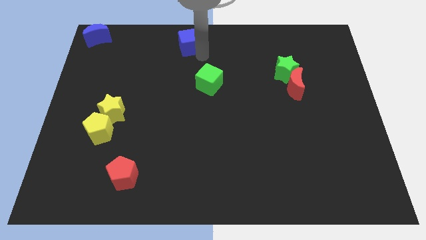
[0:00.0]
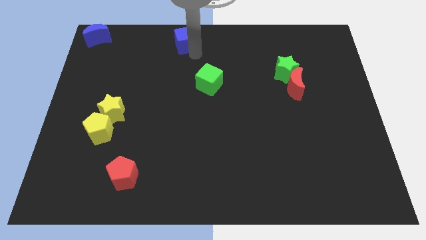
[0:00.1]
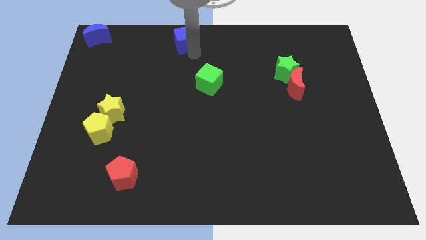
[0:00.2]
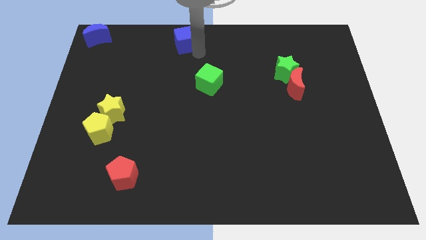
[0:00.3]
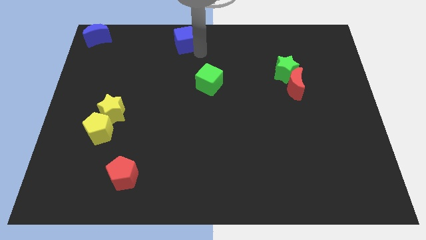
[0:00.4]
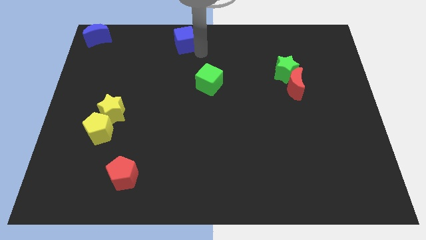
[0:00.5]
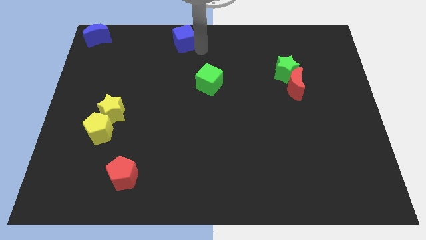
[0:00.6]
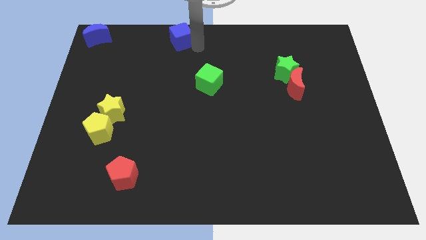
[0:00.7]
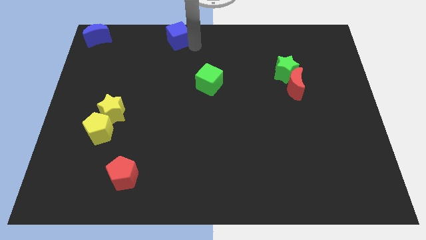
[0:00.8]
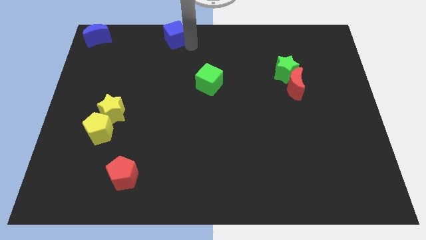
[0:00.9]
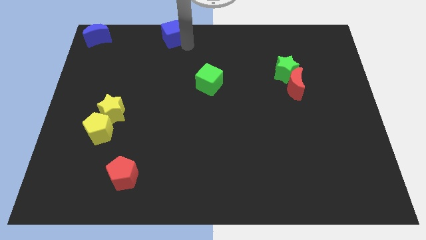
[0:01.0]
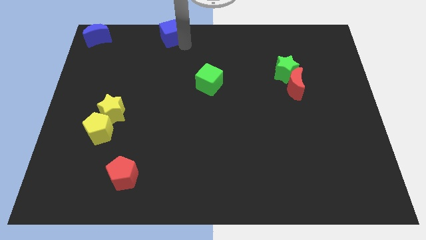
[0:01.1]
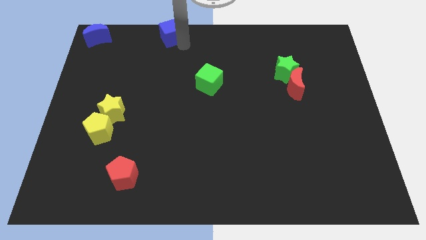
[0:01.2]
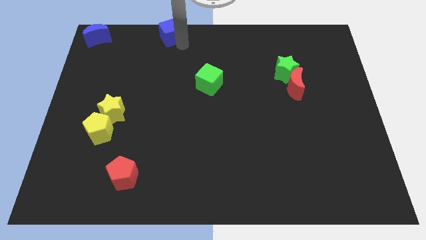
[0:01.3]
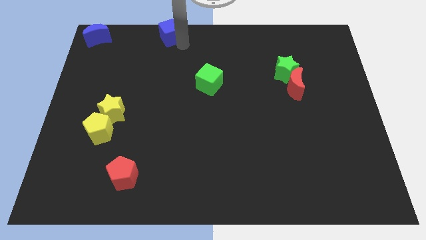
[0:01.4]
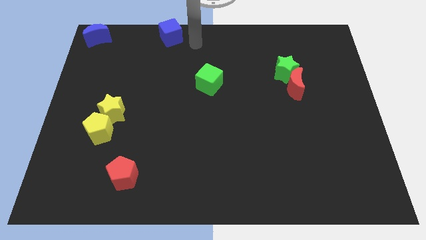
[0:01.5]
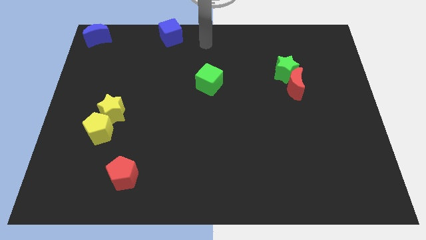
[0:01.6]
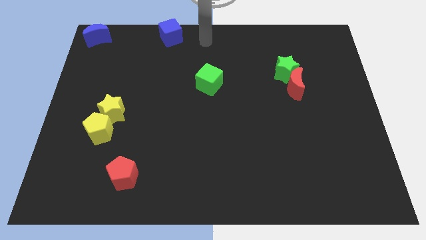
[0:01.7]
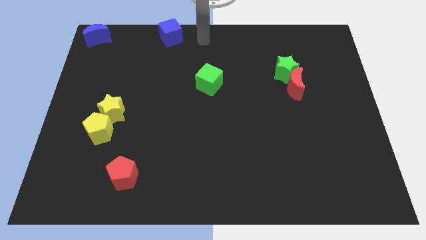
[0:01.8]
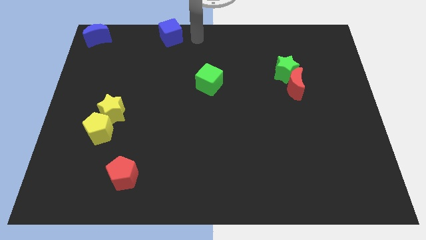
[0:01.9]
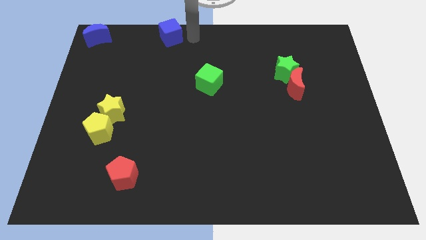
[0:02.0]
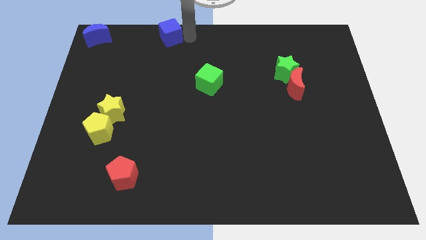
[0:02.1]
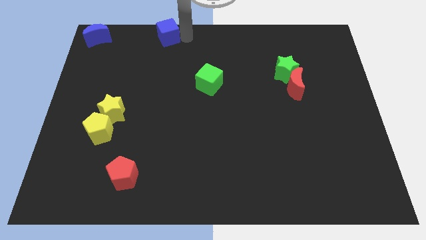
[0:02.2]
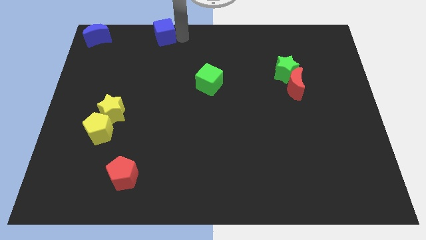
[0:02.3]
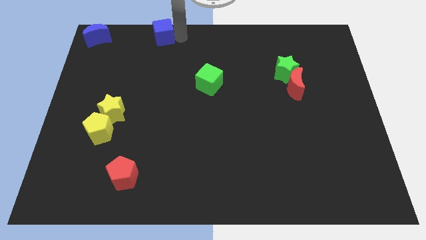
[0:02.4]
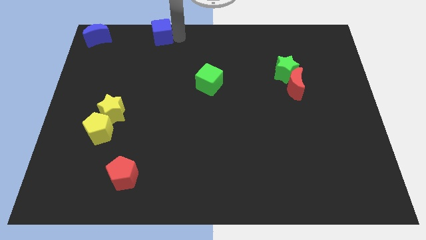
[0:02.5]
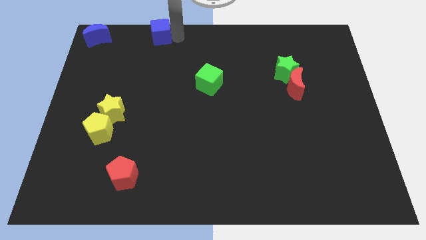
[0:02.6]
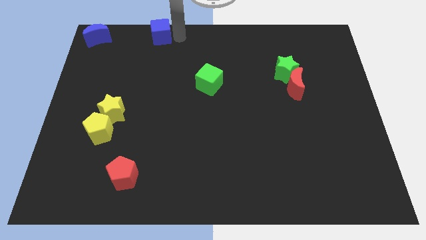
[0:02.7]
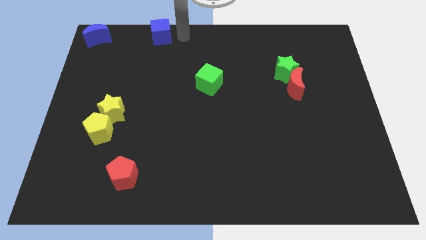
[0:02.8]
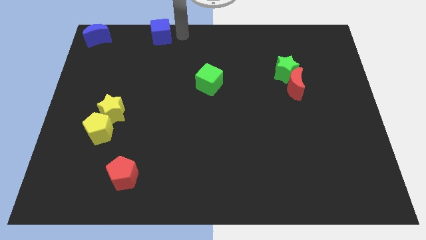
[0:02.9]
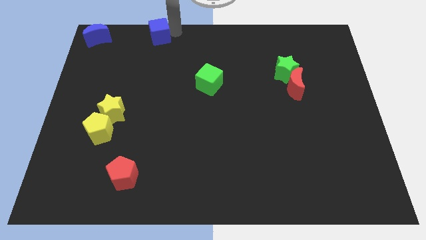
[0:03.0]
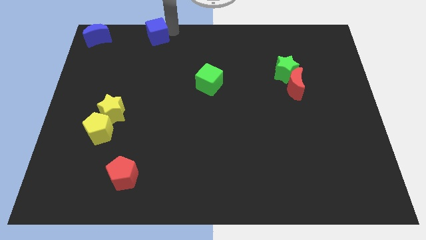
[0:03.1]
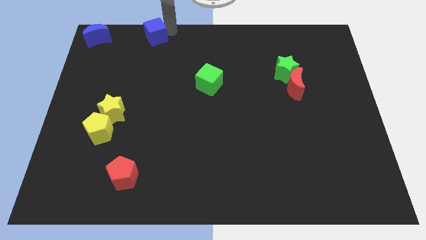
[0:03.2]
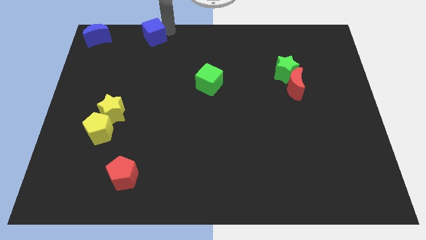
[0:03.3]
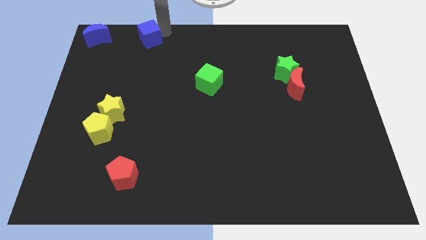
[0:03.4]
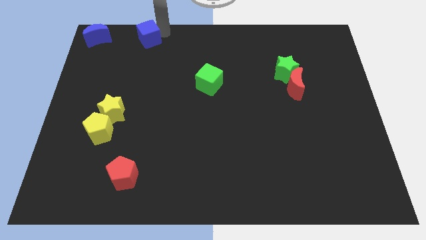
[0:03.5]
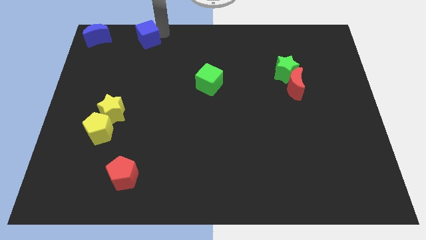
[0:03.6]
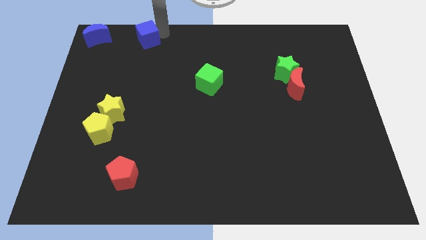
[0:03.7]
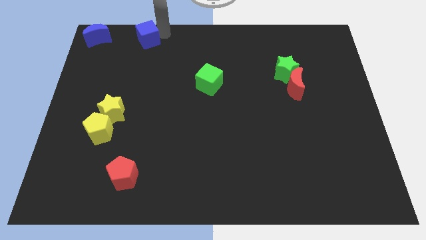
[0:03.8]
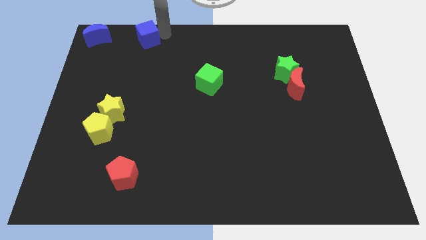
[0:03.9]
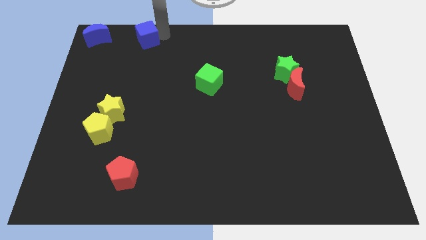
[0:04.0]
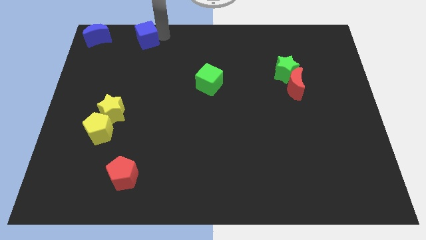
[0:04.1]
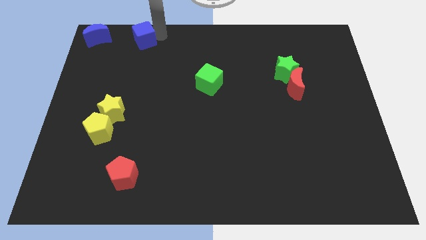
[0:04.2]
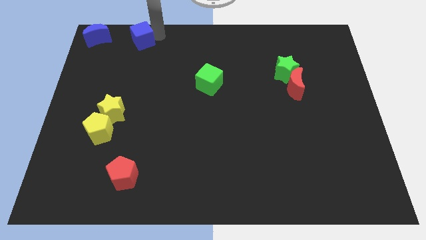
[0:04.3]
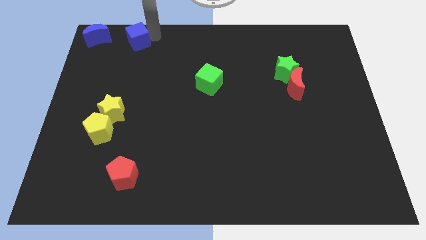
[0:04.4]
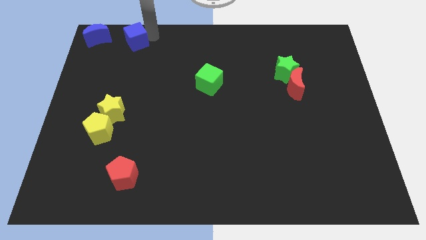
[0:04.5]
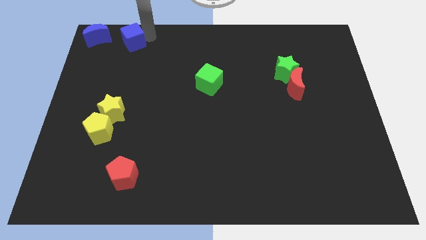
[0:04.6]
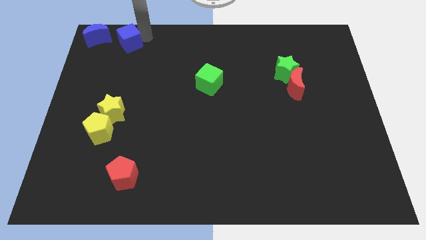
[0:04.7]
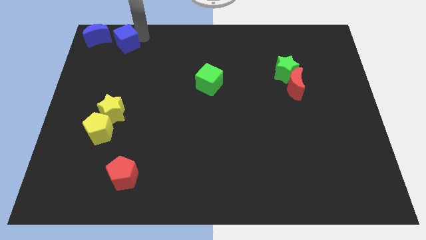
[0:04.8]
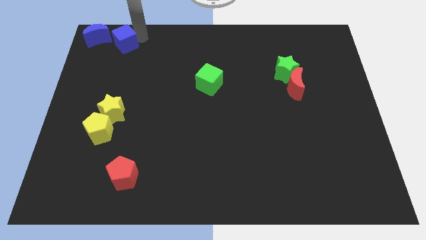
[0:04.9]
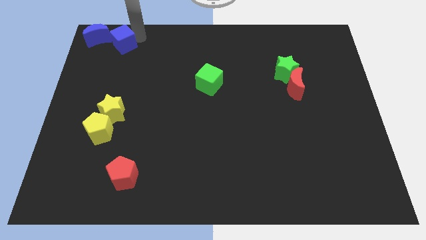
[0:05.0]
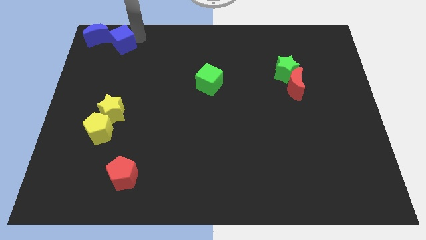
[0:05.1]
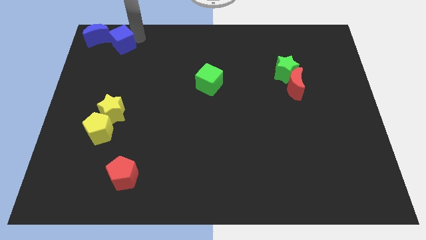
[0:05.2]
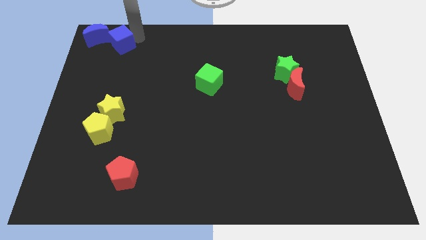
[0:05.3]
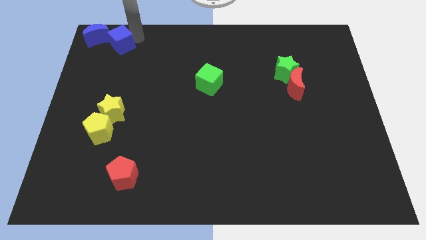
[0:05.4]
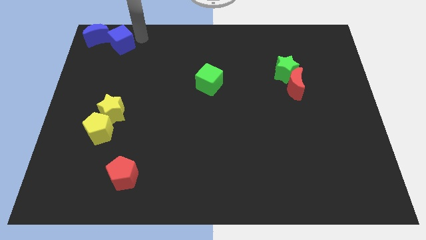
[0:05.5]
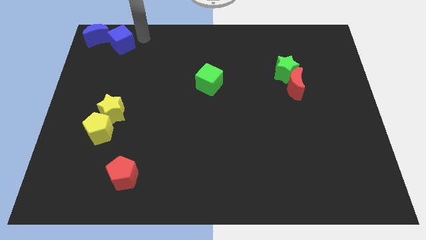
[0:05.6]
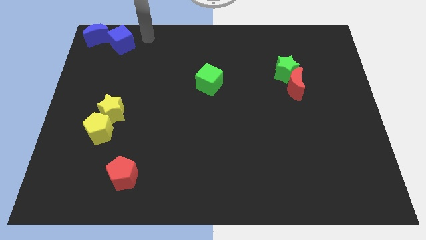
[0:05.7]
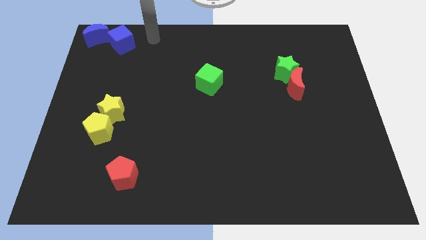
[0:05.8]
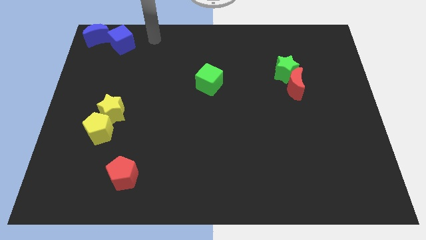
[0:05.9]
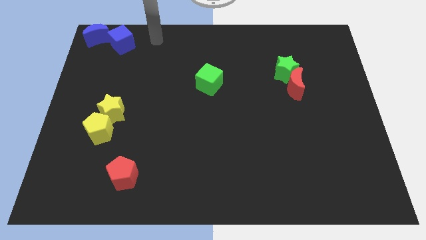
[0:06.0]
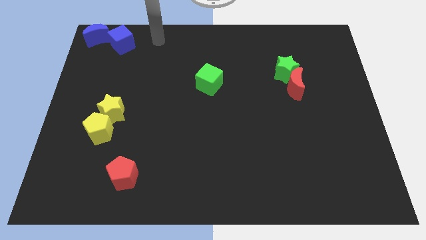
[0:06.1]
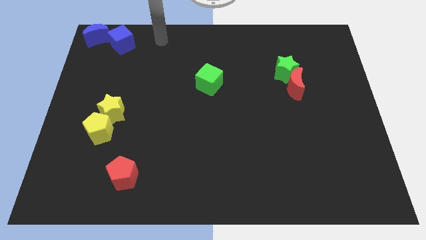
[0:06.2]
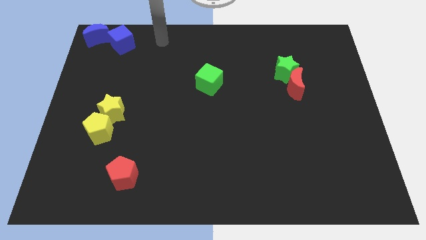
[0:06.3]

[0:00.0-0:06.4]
push the blue cube into the blue moon

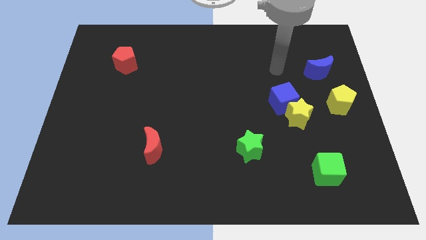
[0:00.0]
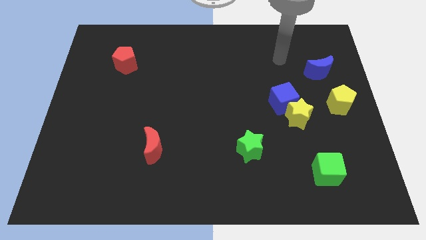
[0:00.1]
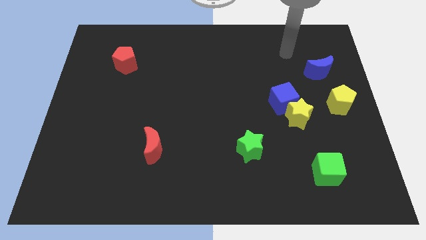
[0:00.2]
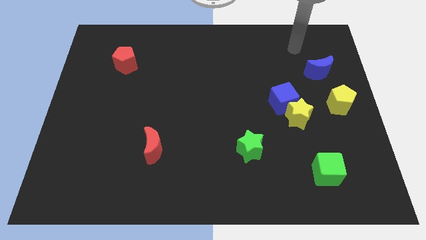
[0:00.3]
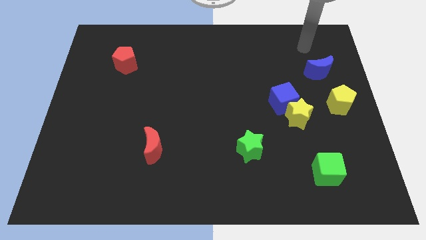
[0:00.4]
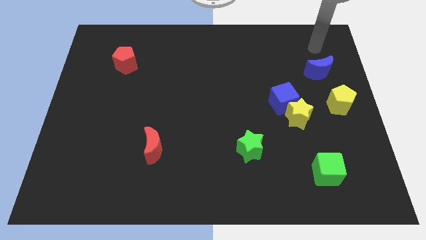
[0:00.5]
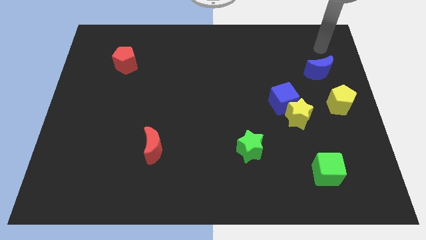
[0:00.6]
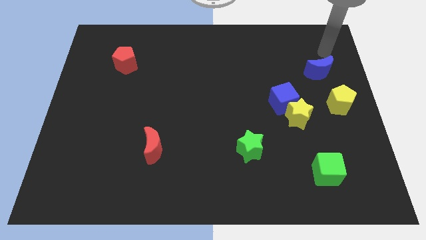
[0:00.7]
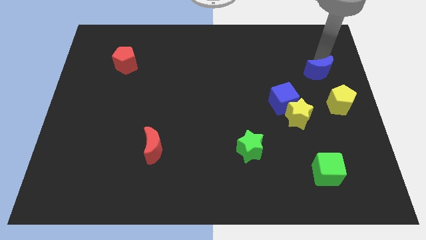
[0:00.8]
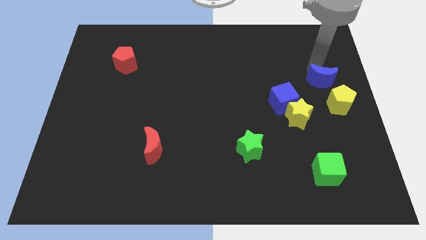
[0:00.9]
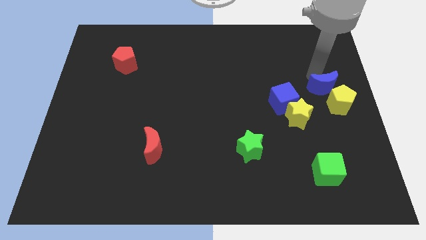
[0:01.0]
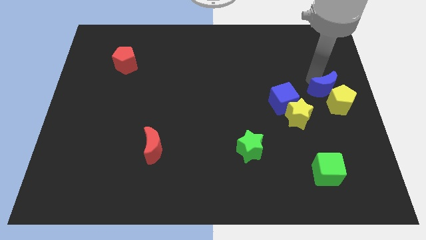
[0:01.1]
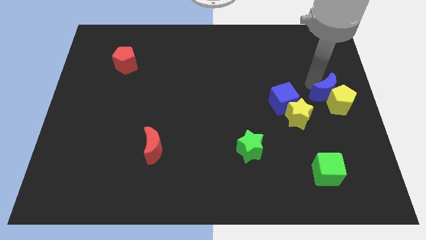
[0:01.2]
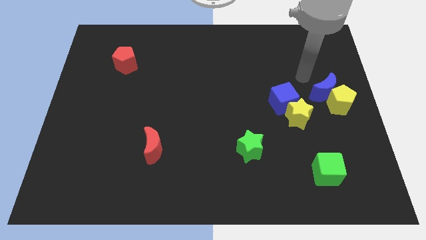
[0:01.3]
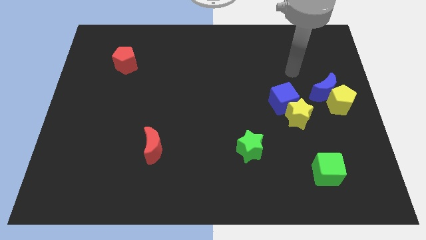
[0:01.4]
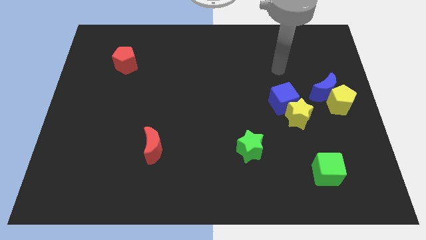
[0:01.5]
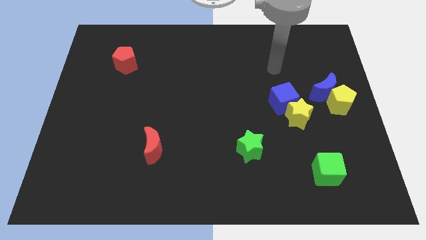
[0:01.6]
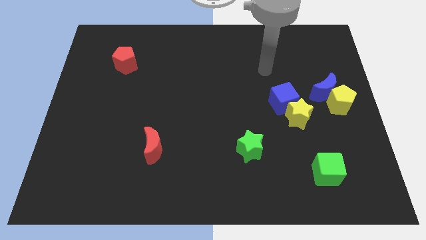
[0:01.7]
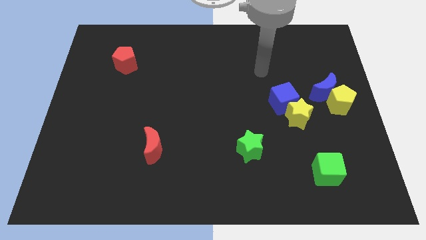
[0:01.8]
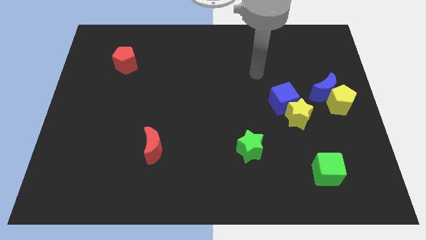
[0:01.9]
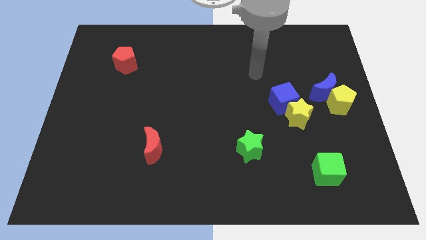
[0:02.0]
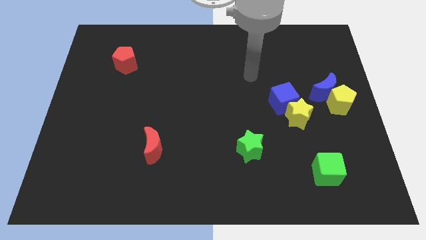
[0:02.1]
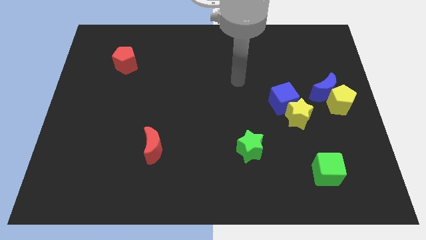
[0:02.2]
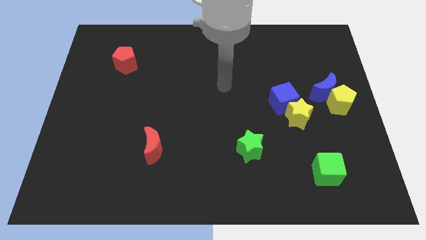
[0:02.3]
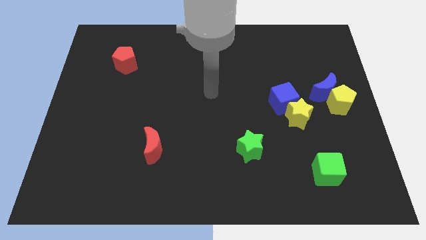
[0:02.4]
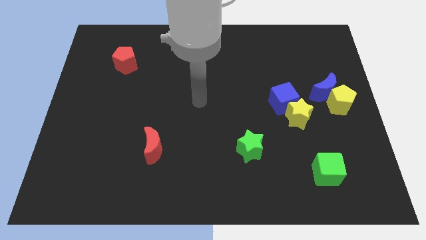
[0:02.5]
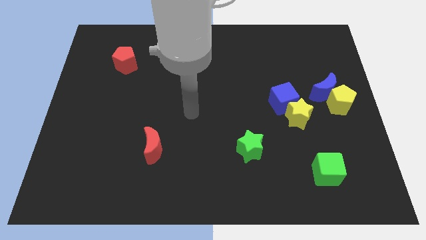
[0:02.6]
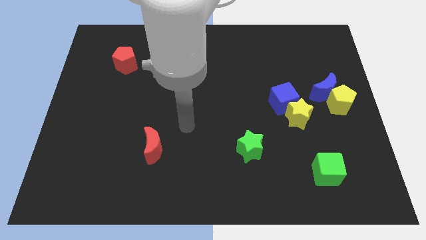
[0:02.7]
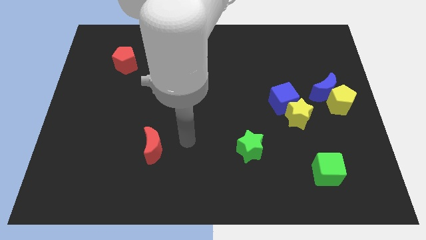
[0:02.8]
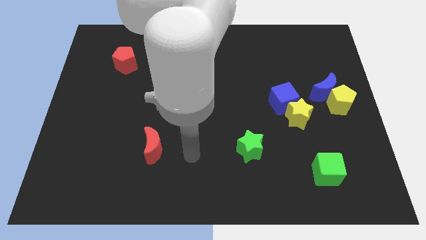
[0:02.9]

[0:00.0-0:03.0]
place the blue crescent above the yellow pentagon
